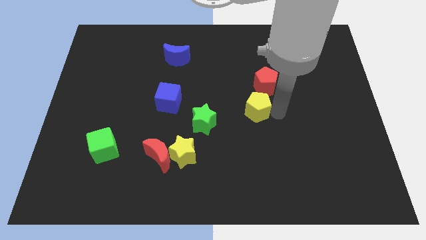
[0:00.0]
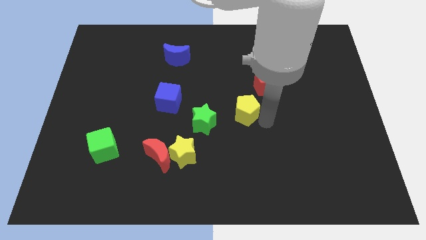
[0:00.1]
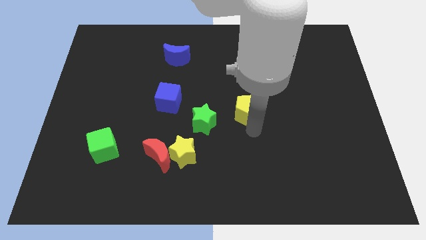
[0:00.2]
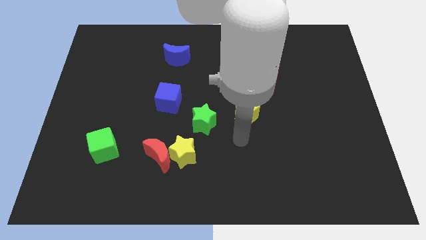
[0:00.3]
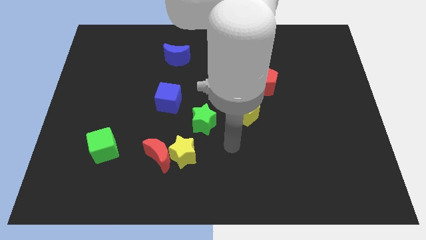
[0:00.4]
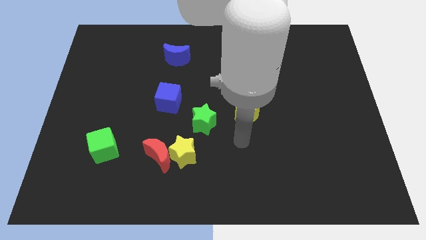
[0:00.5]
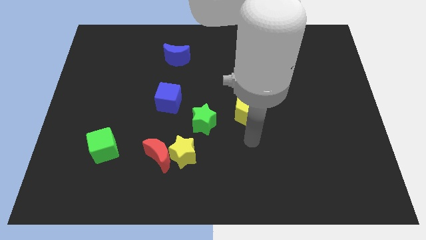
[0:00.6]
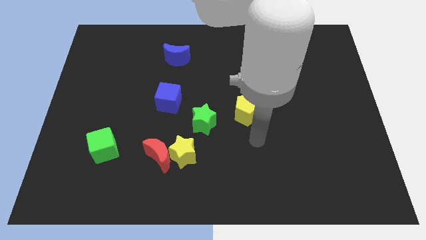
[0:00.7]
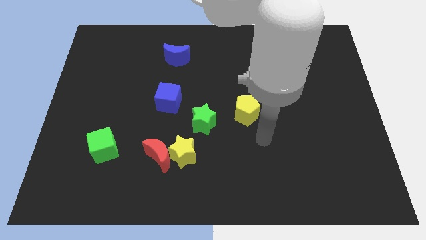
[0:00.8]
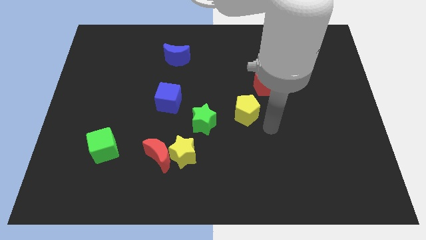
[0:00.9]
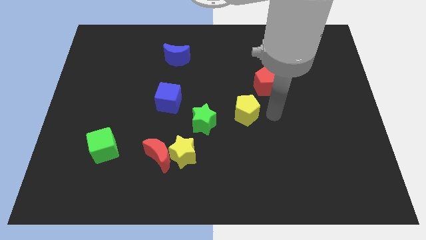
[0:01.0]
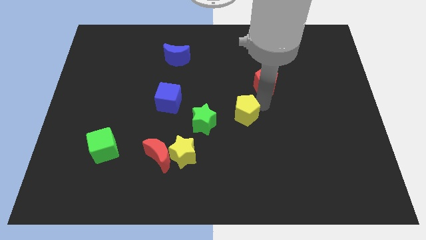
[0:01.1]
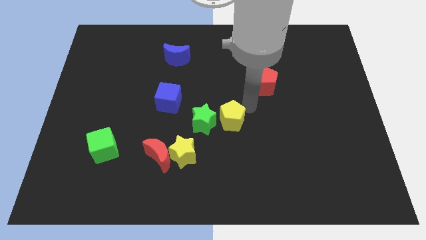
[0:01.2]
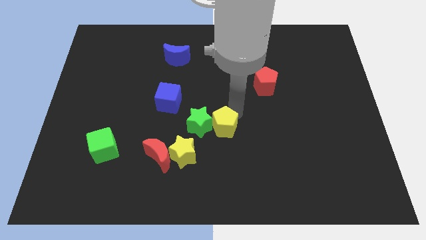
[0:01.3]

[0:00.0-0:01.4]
drag the yellow pentagon into the right side of the green star

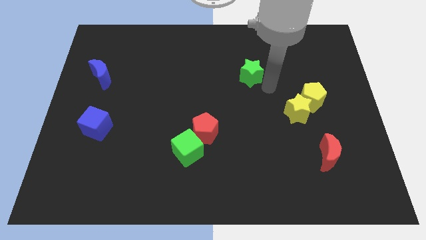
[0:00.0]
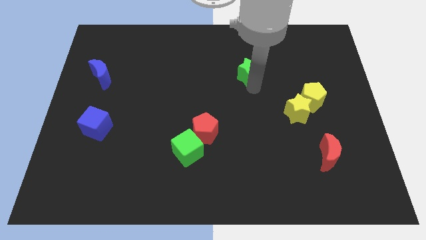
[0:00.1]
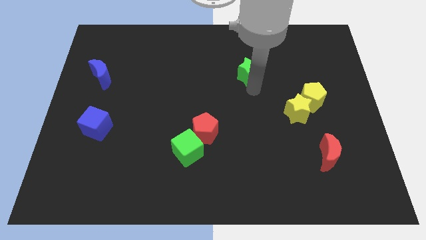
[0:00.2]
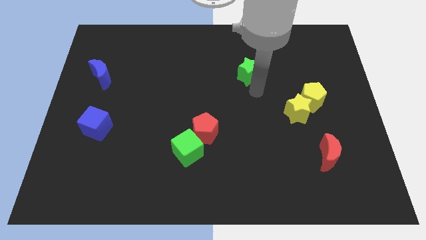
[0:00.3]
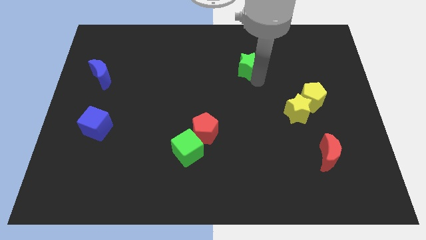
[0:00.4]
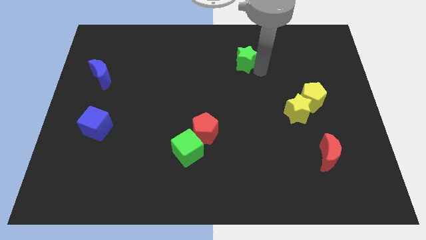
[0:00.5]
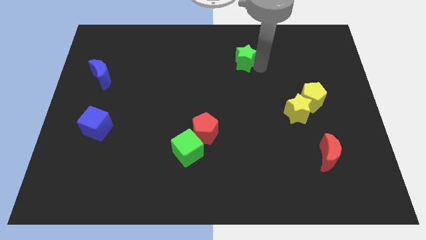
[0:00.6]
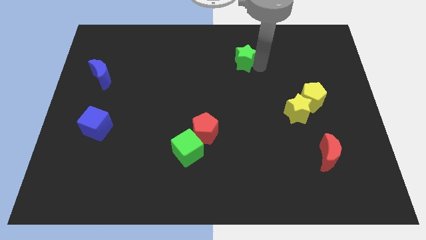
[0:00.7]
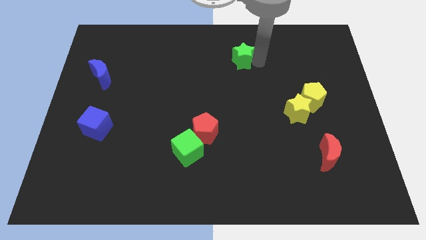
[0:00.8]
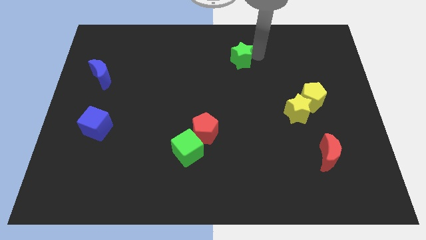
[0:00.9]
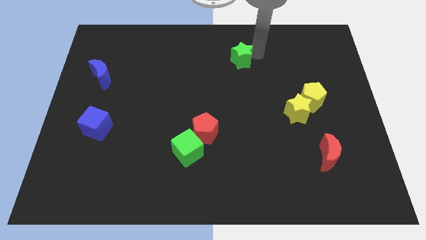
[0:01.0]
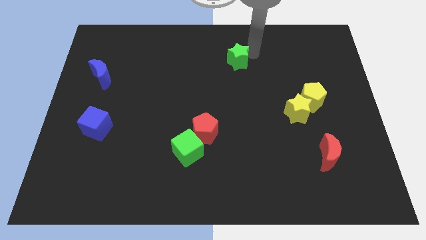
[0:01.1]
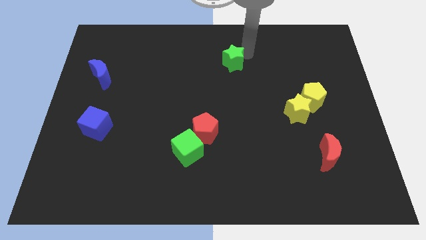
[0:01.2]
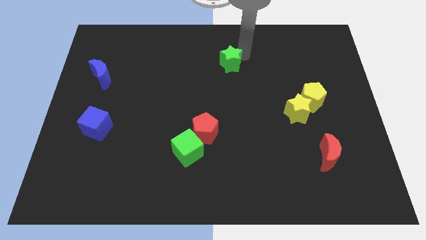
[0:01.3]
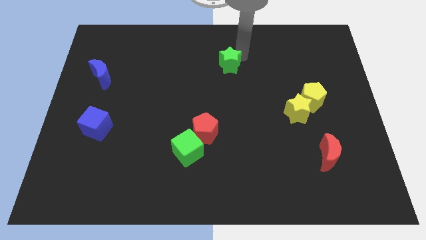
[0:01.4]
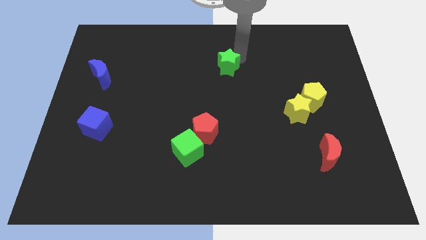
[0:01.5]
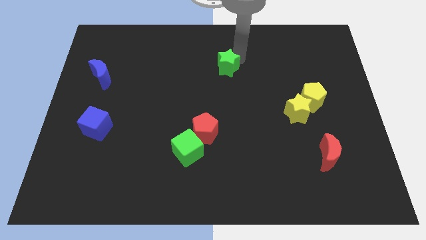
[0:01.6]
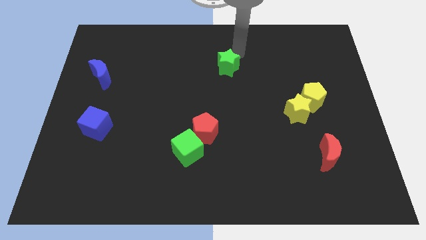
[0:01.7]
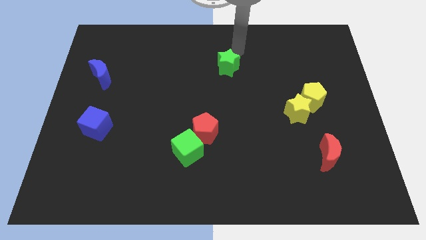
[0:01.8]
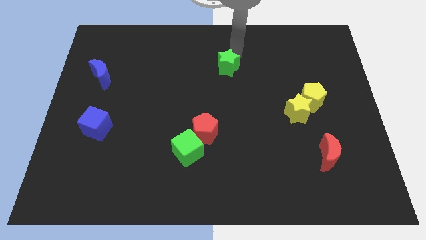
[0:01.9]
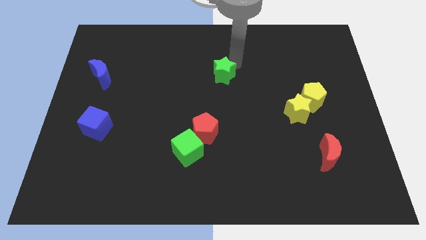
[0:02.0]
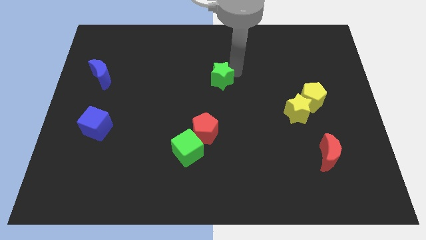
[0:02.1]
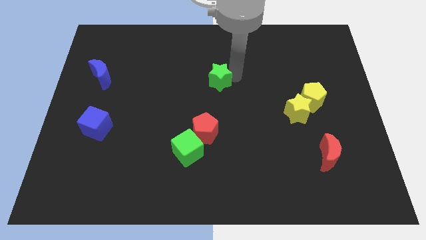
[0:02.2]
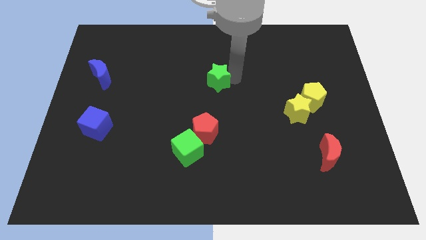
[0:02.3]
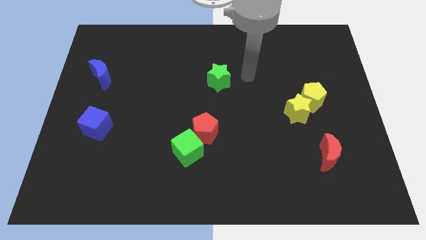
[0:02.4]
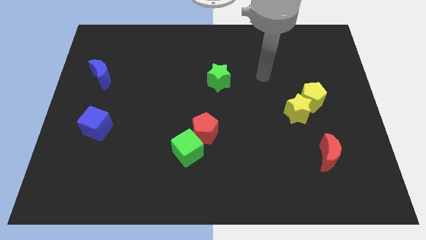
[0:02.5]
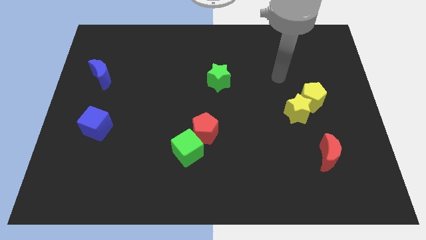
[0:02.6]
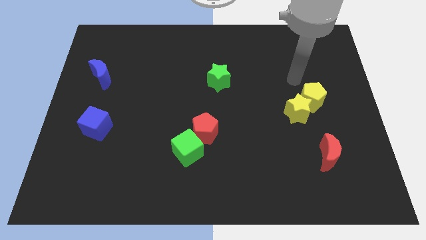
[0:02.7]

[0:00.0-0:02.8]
push the green star towards the center of the board

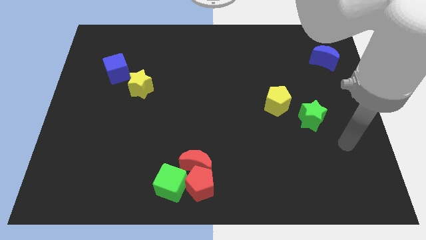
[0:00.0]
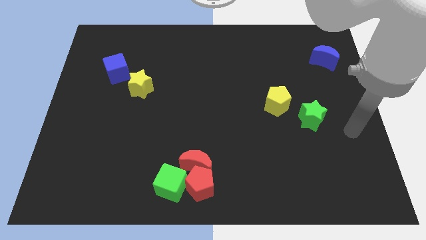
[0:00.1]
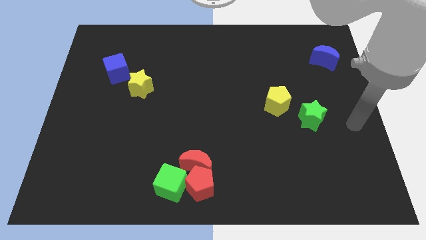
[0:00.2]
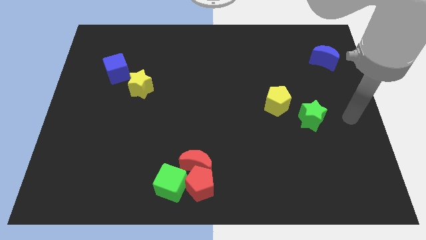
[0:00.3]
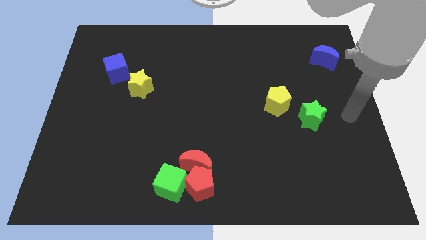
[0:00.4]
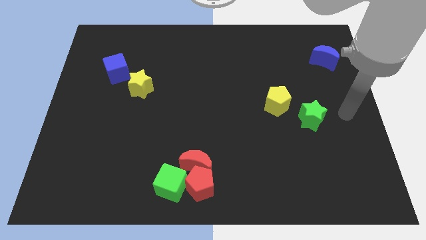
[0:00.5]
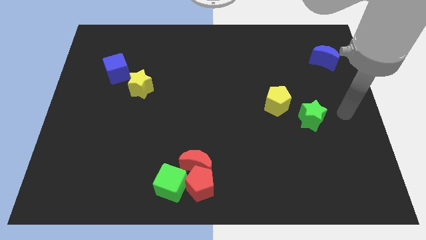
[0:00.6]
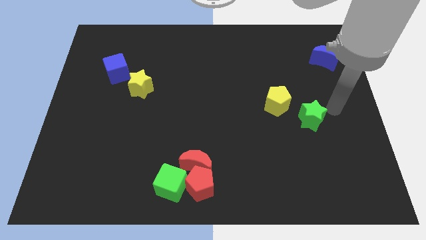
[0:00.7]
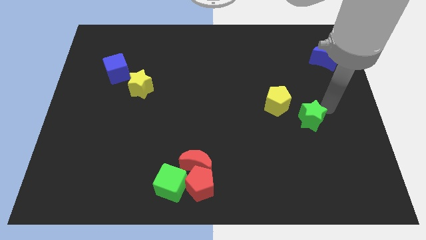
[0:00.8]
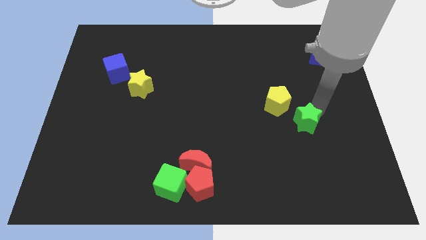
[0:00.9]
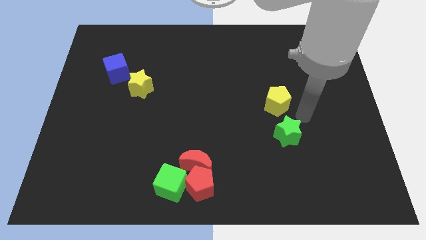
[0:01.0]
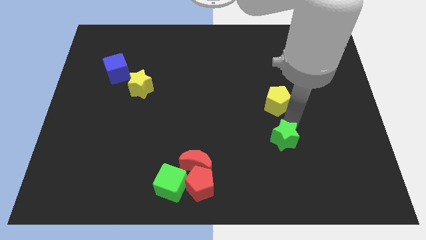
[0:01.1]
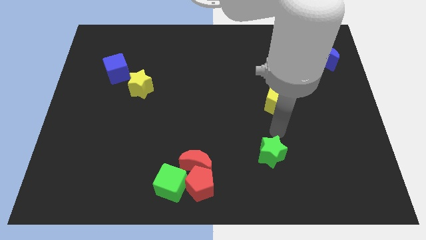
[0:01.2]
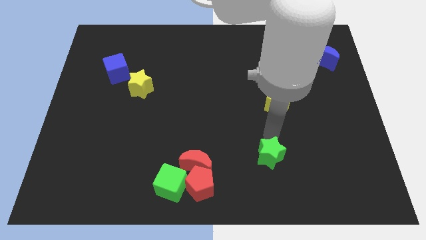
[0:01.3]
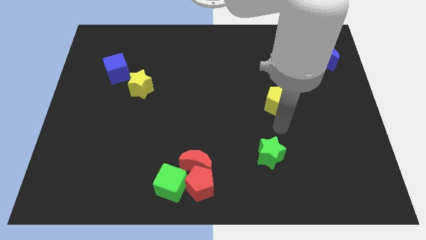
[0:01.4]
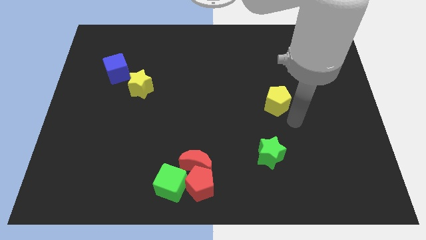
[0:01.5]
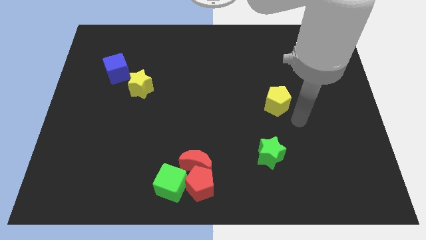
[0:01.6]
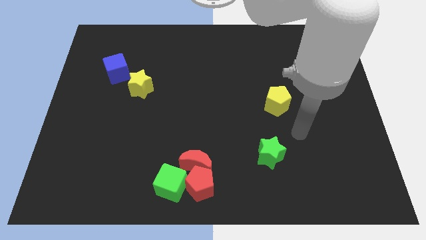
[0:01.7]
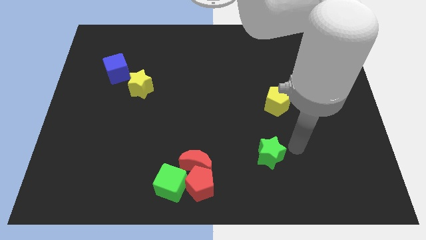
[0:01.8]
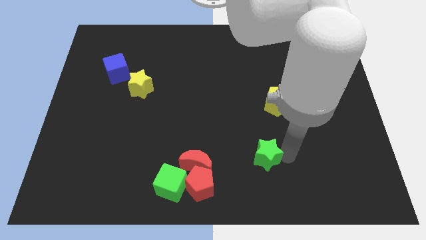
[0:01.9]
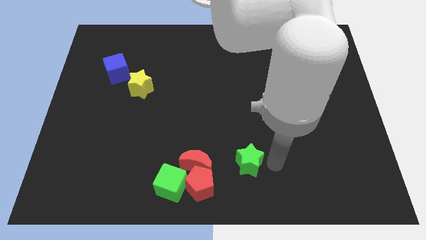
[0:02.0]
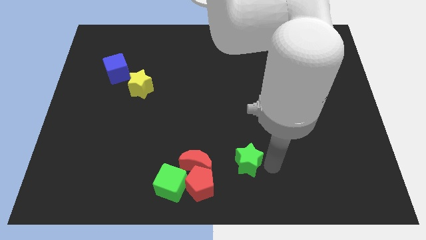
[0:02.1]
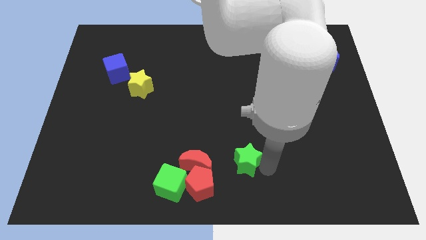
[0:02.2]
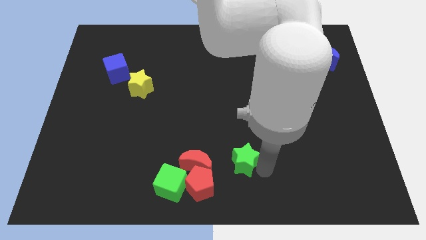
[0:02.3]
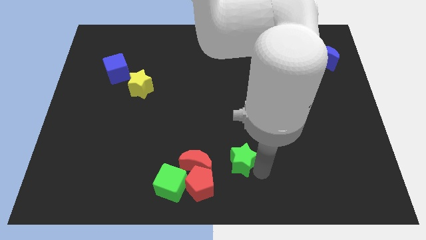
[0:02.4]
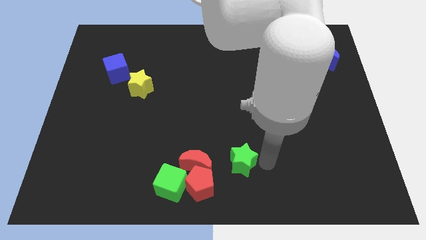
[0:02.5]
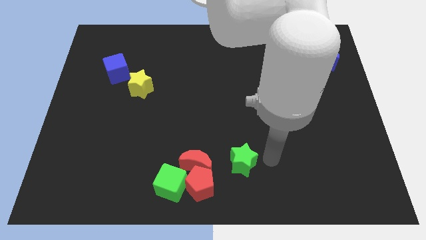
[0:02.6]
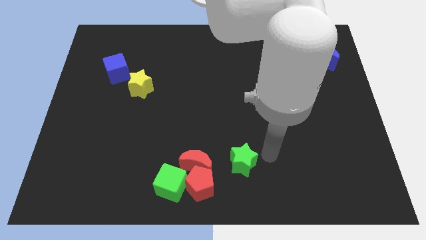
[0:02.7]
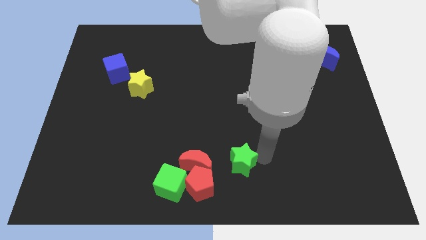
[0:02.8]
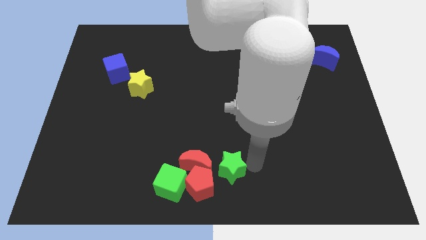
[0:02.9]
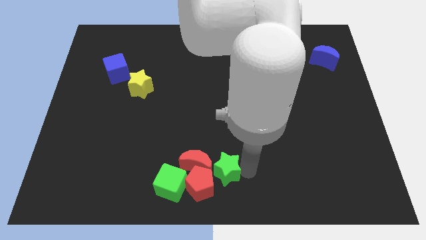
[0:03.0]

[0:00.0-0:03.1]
move the green star into the group of red blocks

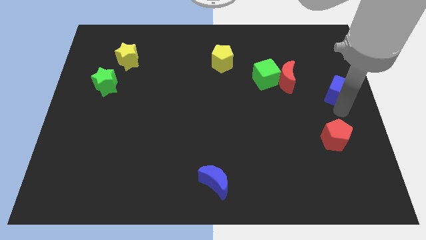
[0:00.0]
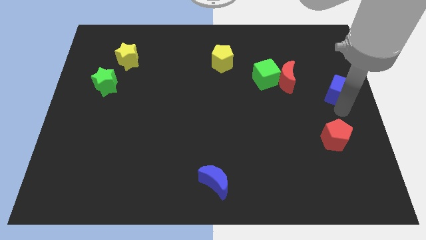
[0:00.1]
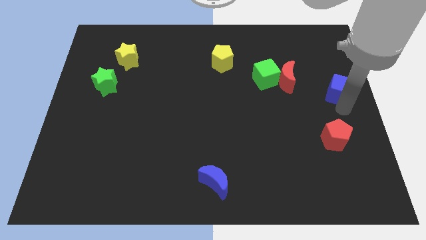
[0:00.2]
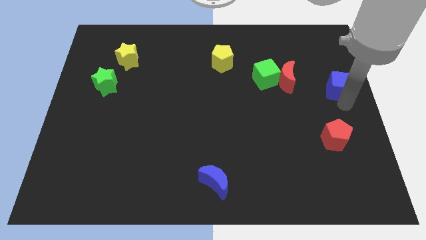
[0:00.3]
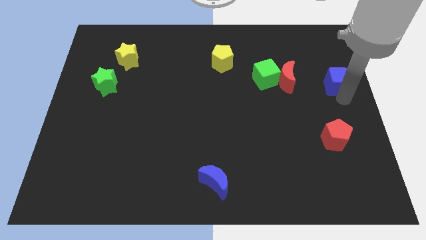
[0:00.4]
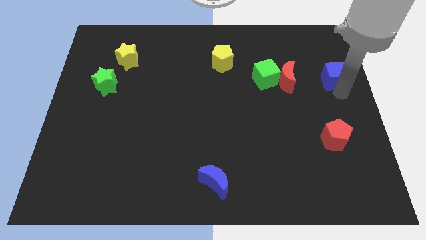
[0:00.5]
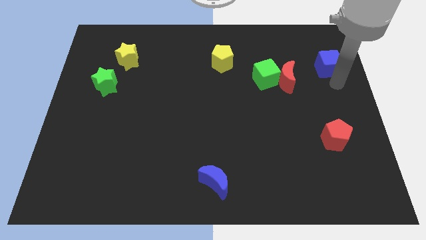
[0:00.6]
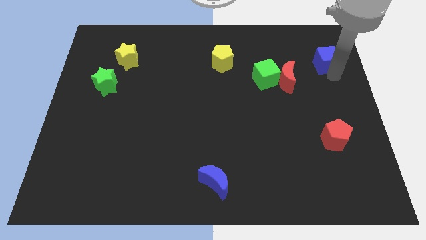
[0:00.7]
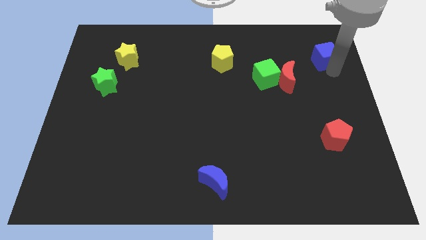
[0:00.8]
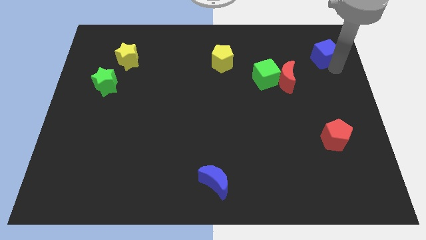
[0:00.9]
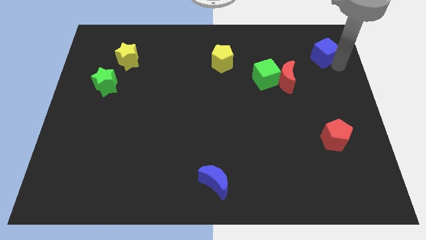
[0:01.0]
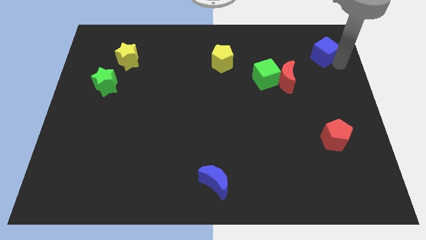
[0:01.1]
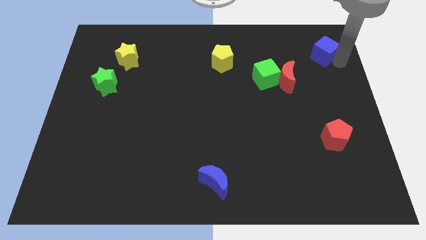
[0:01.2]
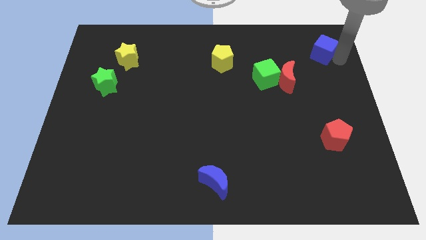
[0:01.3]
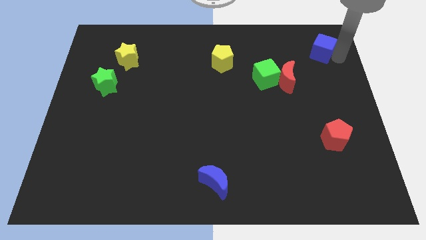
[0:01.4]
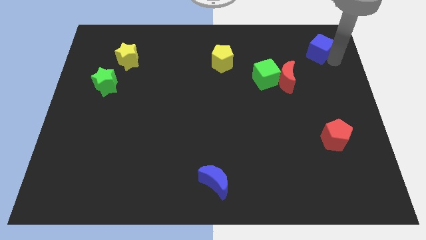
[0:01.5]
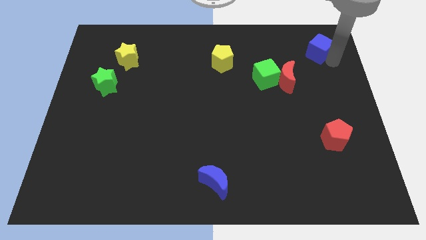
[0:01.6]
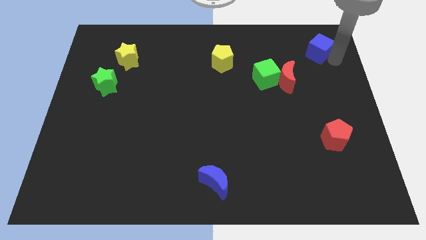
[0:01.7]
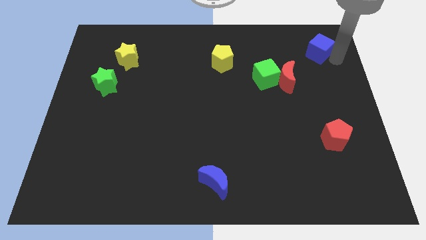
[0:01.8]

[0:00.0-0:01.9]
move the blue cube to the top right of the board
